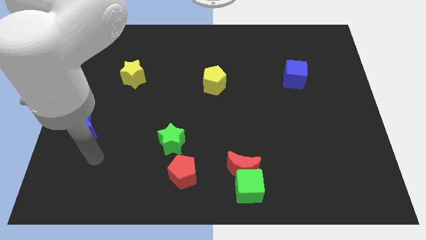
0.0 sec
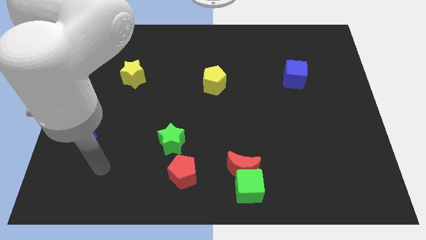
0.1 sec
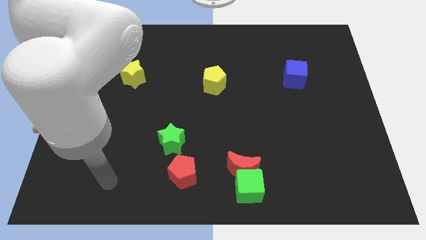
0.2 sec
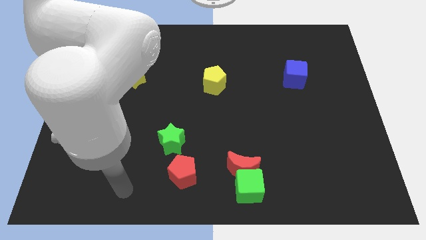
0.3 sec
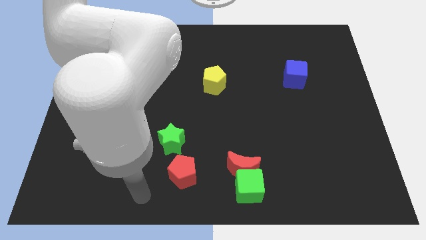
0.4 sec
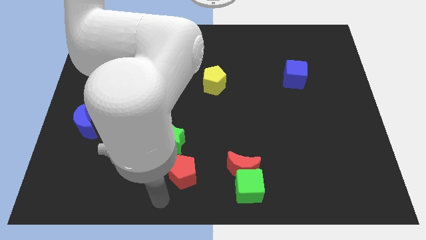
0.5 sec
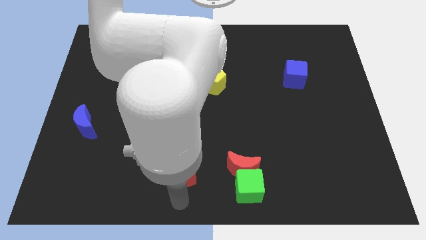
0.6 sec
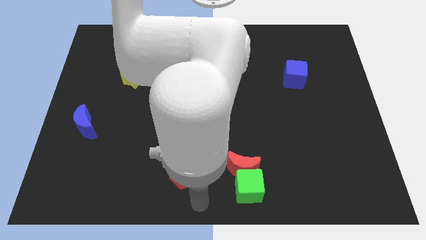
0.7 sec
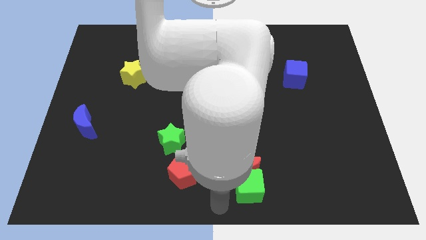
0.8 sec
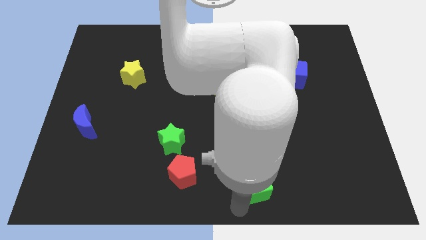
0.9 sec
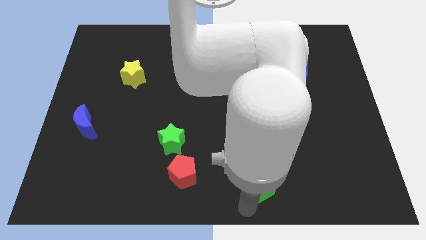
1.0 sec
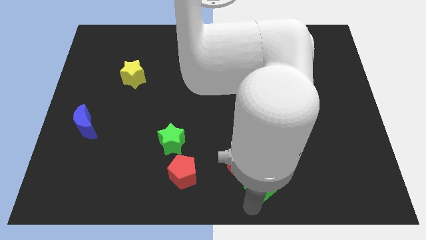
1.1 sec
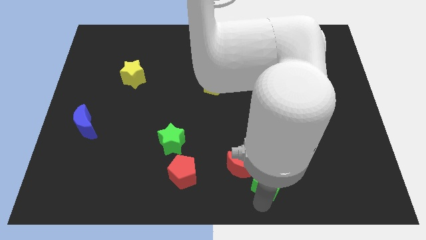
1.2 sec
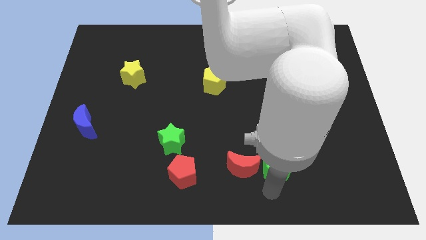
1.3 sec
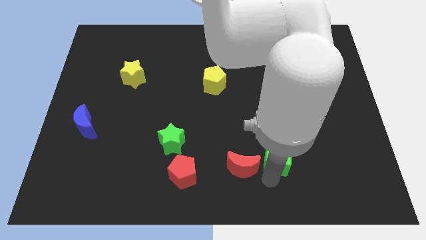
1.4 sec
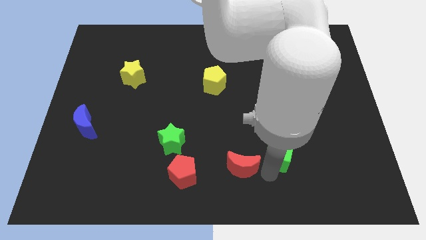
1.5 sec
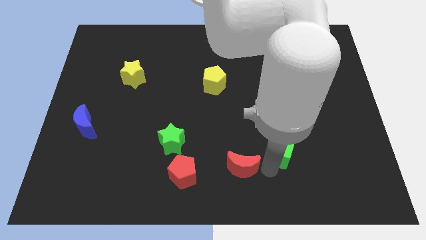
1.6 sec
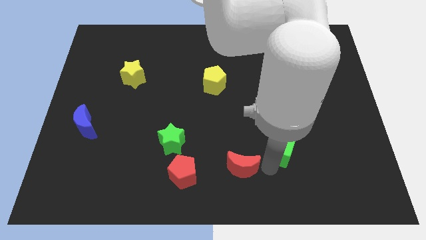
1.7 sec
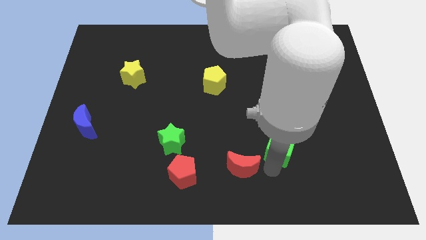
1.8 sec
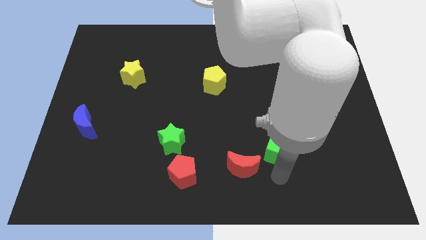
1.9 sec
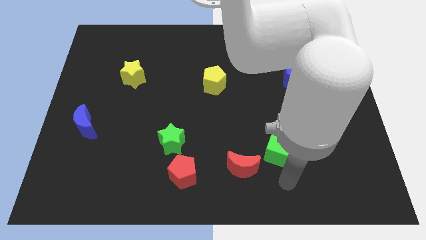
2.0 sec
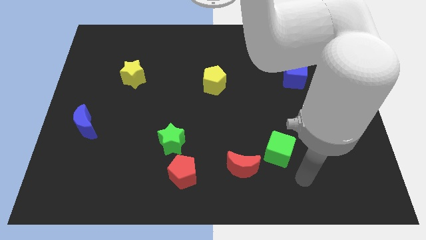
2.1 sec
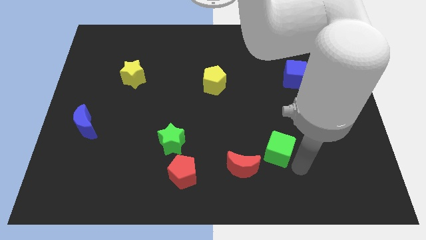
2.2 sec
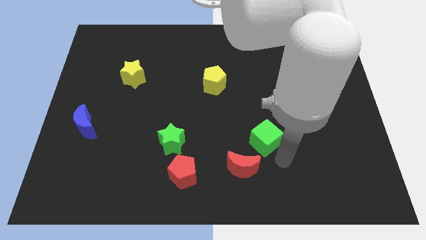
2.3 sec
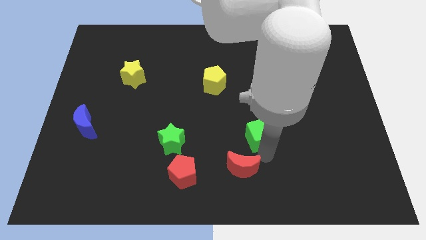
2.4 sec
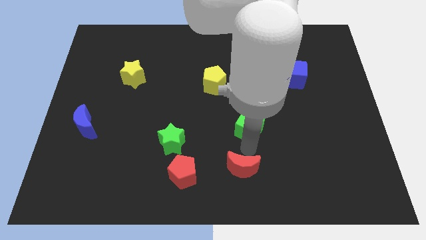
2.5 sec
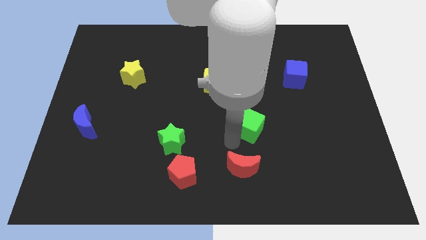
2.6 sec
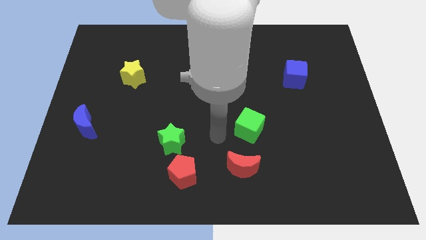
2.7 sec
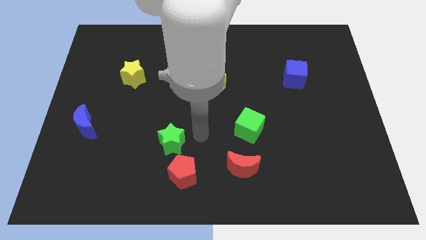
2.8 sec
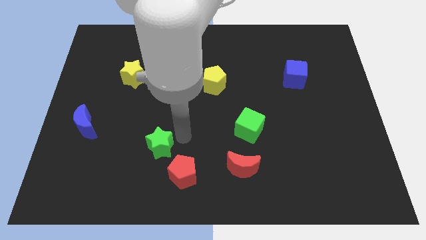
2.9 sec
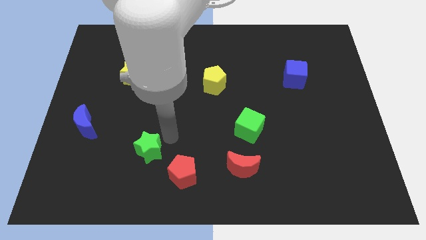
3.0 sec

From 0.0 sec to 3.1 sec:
place the green cube on the top of the red crescent

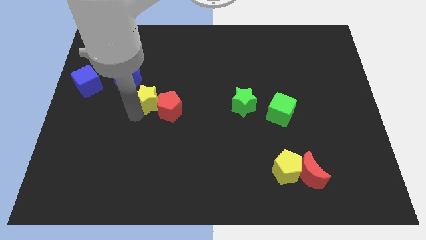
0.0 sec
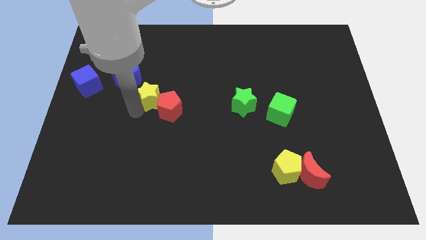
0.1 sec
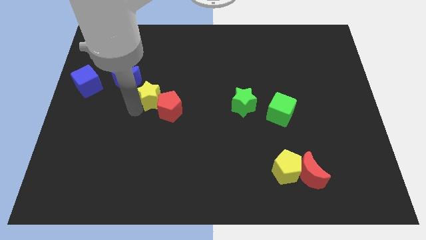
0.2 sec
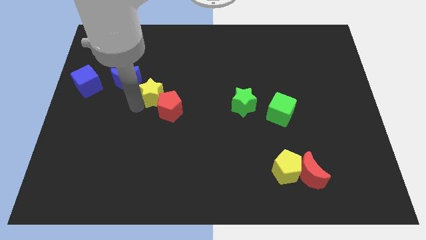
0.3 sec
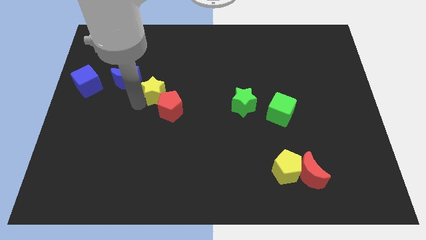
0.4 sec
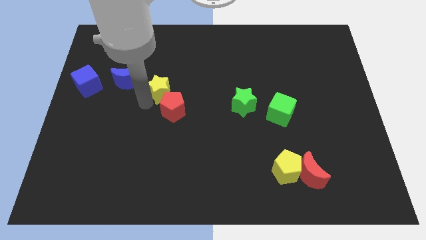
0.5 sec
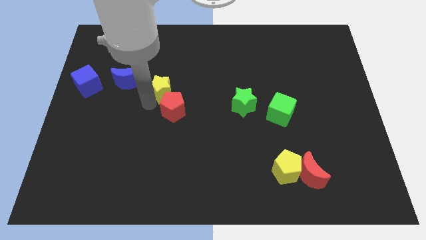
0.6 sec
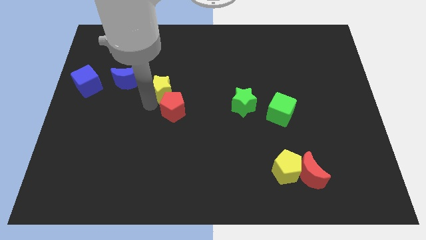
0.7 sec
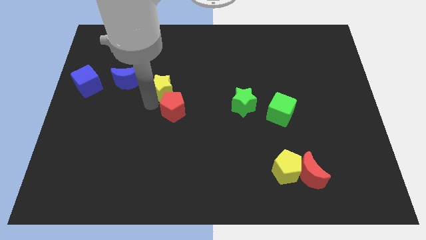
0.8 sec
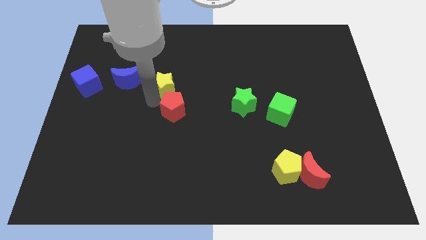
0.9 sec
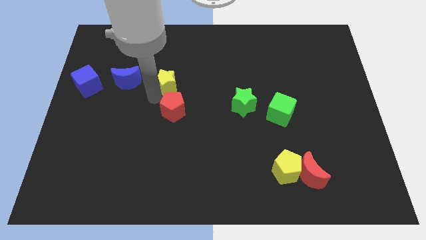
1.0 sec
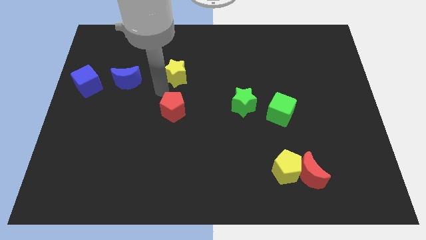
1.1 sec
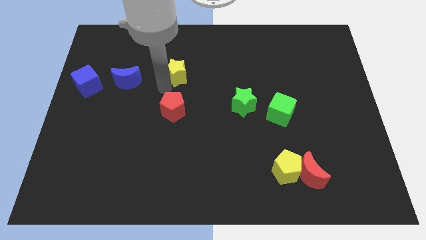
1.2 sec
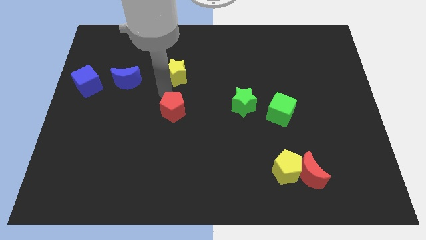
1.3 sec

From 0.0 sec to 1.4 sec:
place the yellow star right to the blue moon

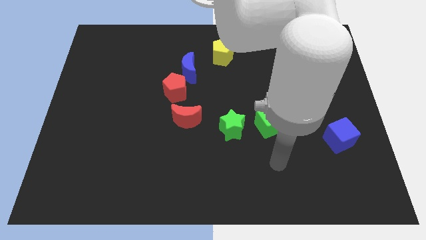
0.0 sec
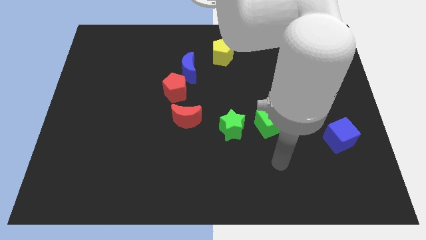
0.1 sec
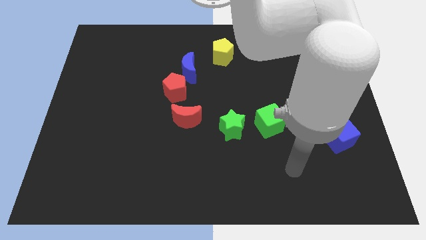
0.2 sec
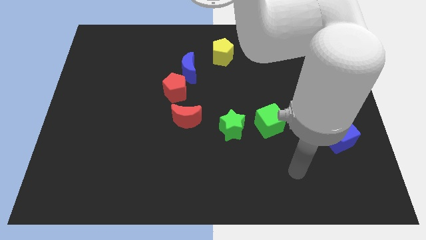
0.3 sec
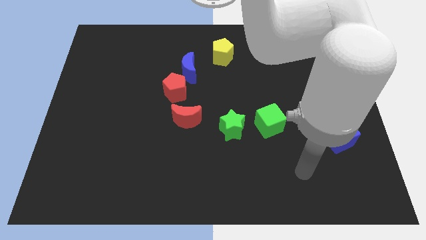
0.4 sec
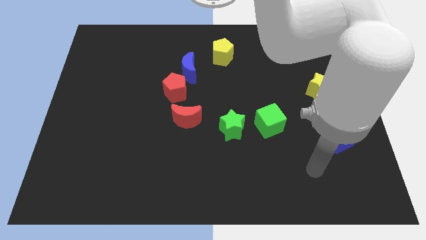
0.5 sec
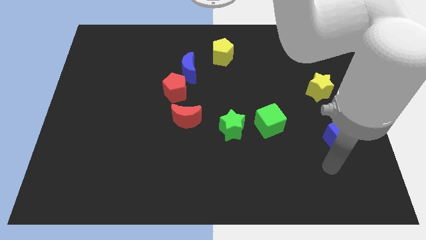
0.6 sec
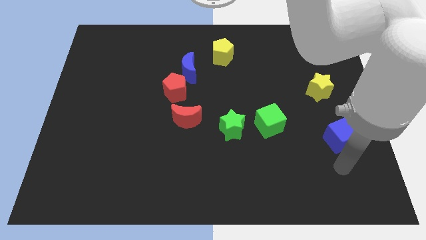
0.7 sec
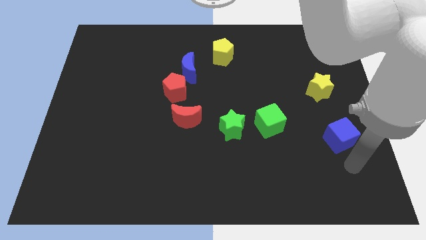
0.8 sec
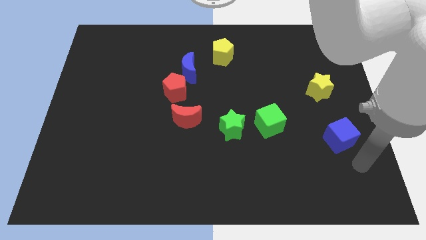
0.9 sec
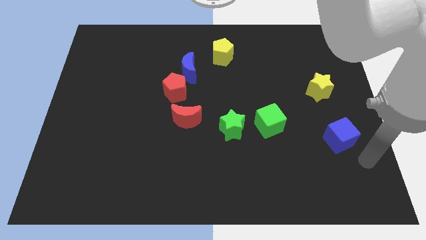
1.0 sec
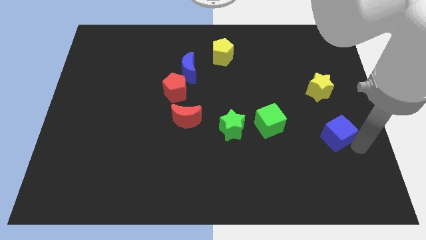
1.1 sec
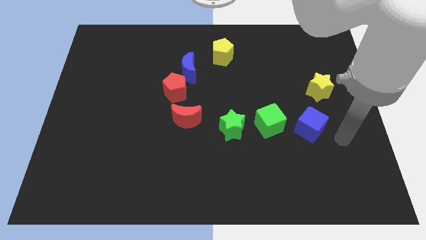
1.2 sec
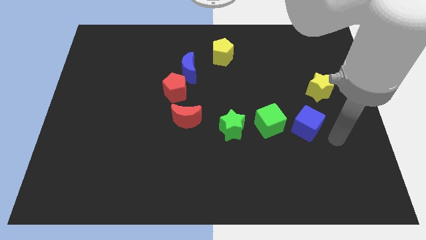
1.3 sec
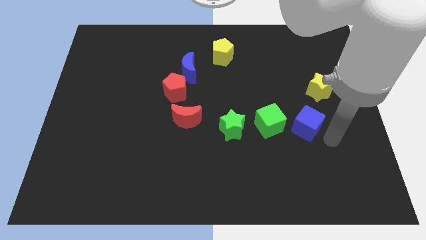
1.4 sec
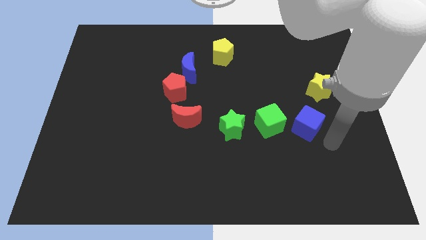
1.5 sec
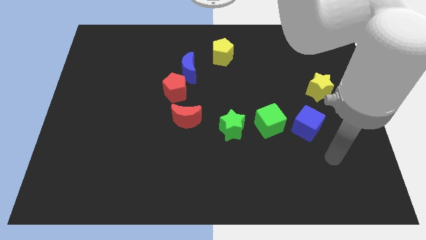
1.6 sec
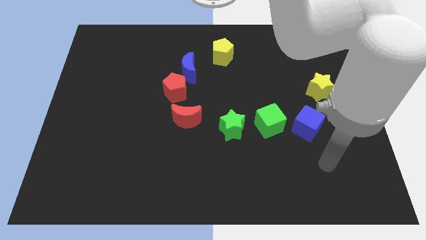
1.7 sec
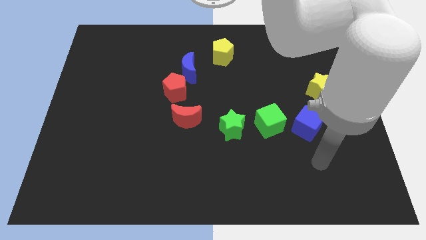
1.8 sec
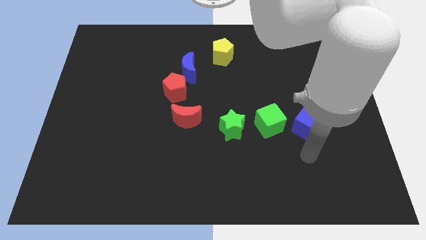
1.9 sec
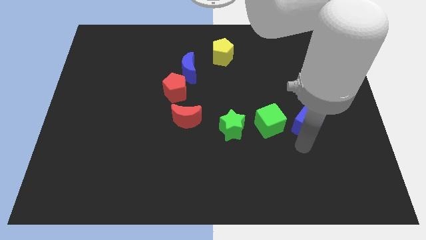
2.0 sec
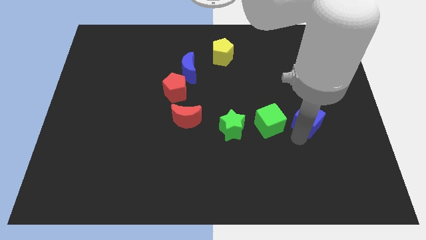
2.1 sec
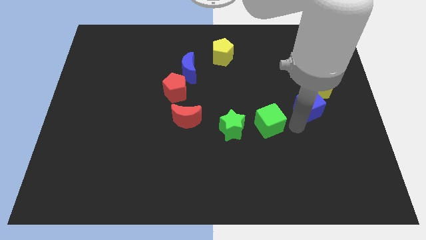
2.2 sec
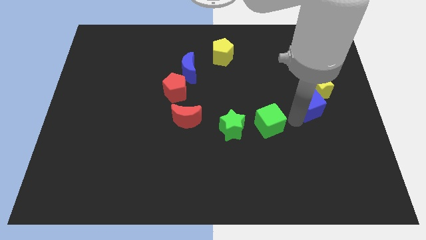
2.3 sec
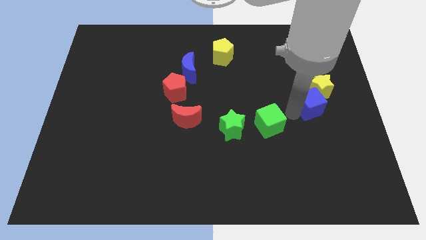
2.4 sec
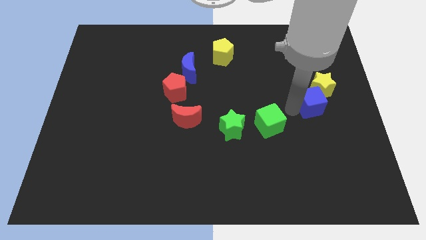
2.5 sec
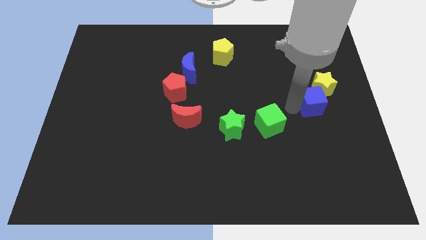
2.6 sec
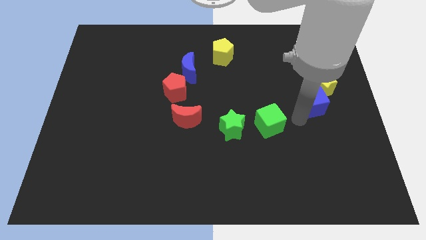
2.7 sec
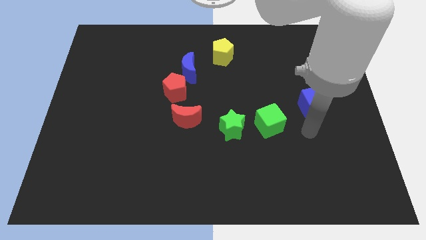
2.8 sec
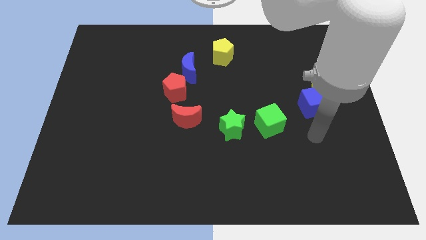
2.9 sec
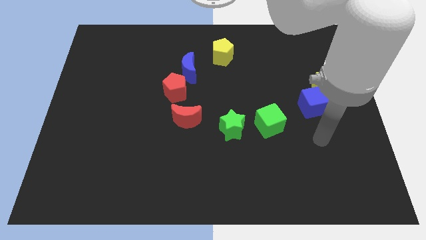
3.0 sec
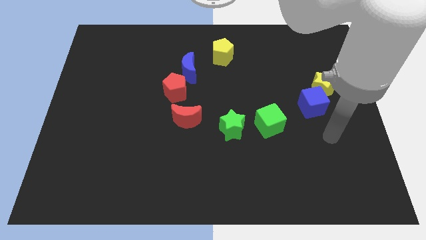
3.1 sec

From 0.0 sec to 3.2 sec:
push the blue cube into the yellow star

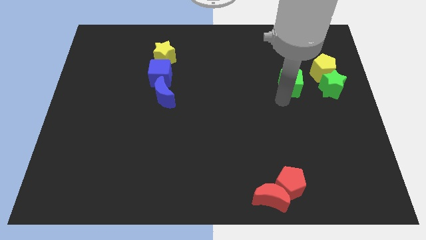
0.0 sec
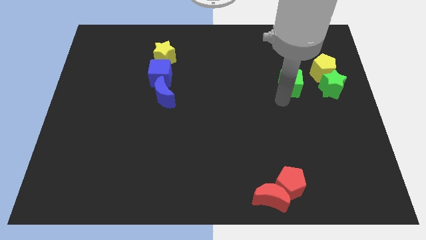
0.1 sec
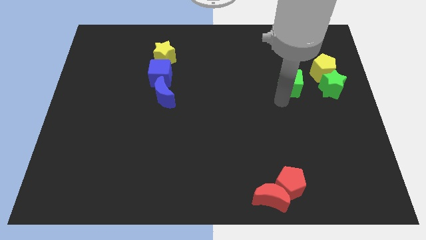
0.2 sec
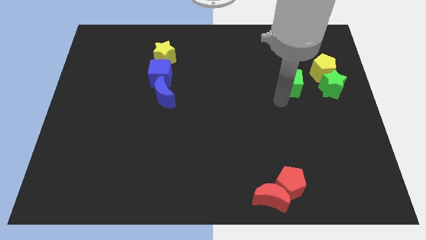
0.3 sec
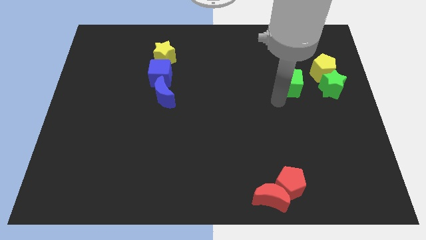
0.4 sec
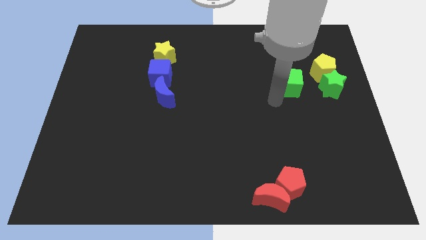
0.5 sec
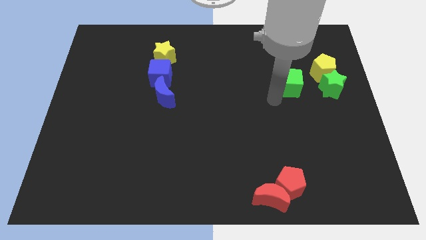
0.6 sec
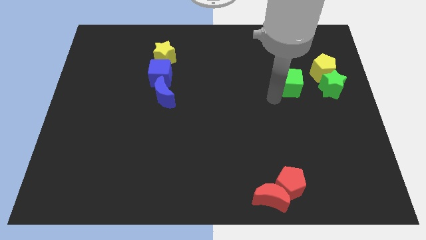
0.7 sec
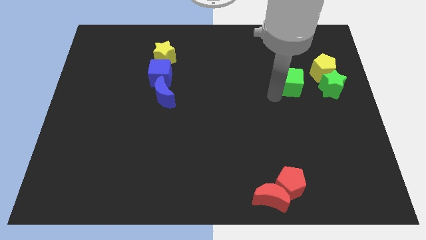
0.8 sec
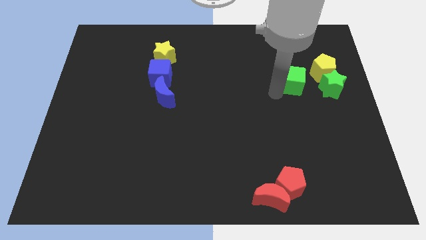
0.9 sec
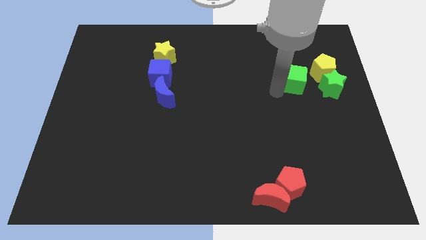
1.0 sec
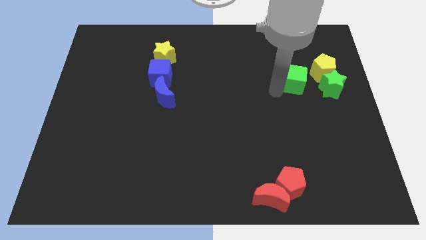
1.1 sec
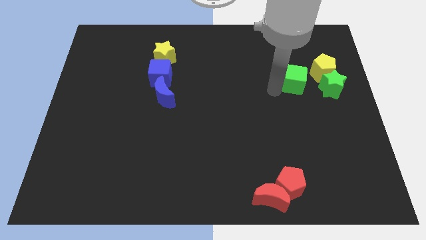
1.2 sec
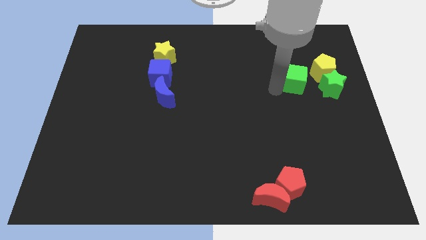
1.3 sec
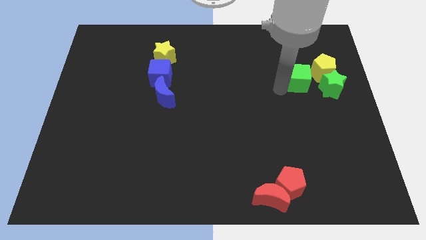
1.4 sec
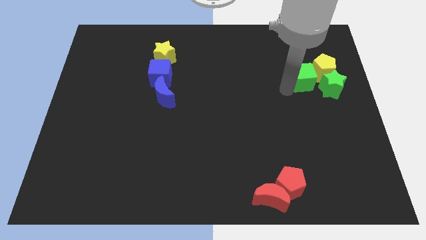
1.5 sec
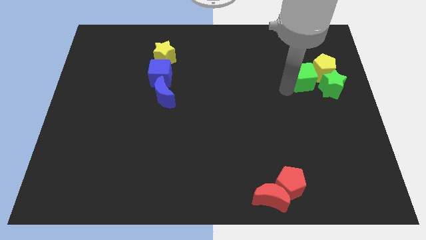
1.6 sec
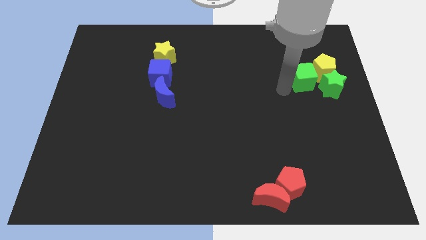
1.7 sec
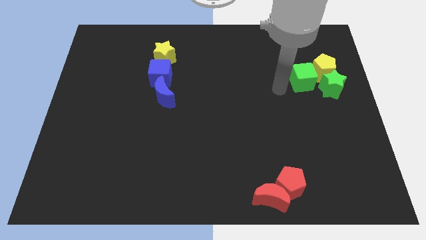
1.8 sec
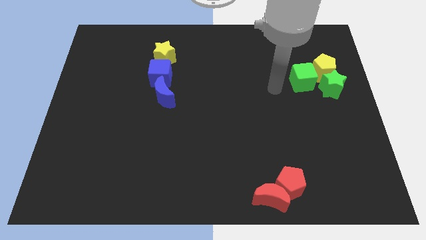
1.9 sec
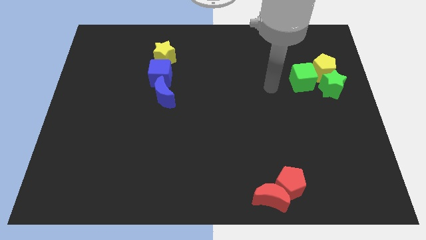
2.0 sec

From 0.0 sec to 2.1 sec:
push green cube into yellow pentagon
